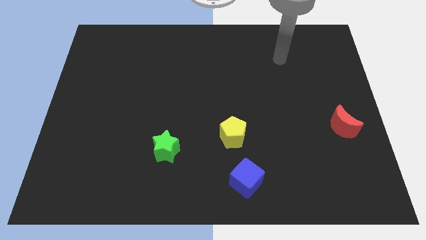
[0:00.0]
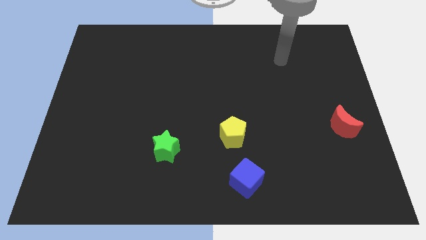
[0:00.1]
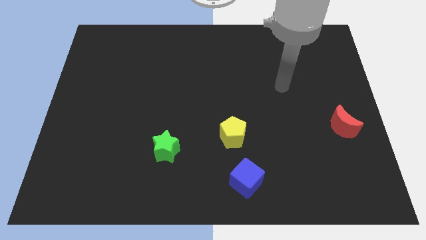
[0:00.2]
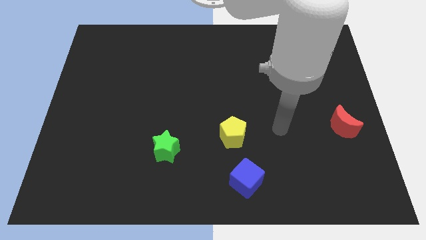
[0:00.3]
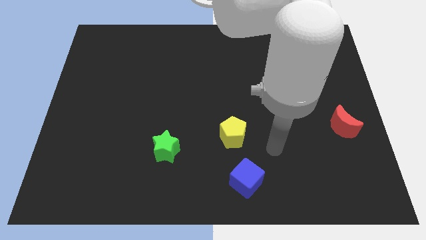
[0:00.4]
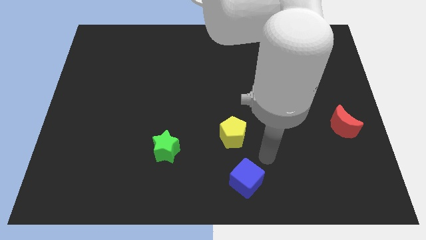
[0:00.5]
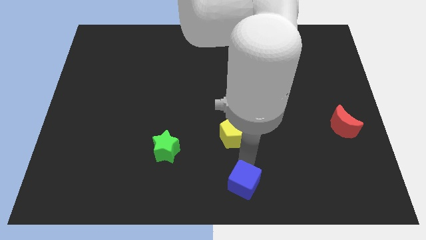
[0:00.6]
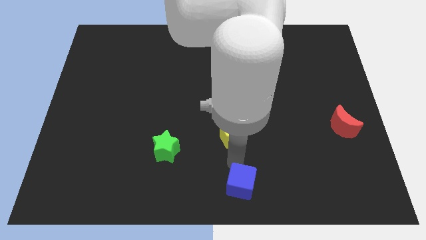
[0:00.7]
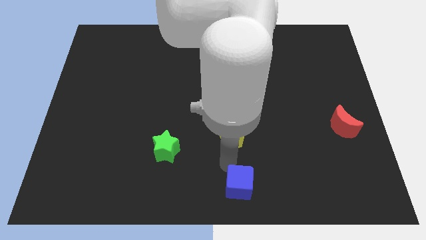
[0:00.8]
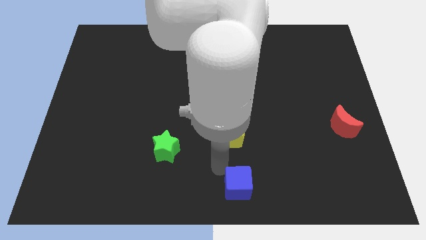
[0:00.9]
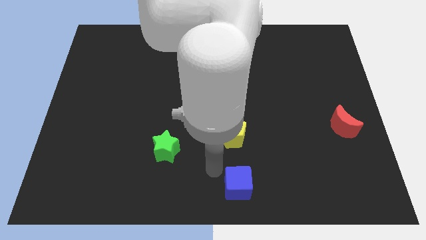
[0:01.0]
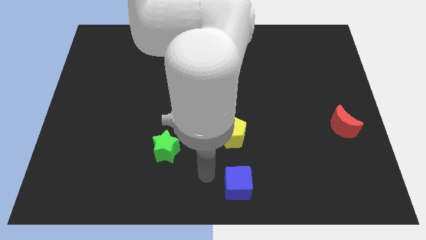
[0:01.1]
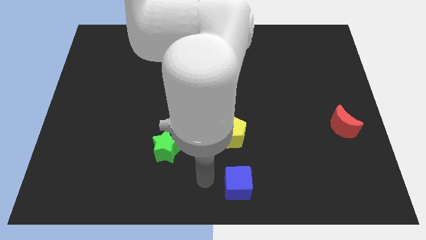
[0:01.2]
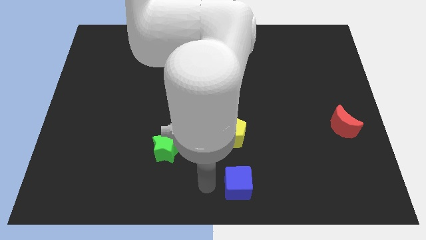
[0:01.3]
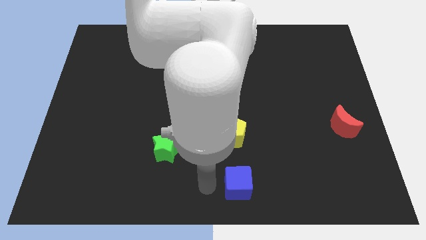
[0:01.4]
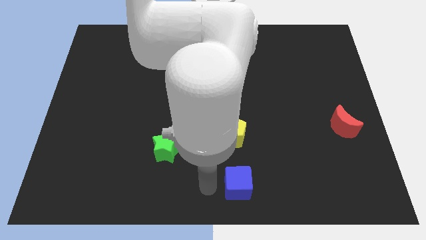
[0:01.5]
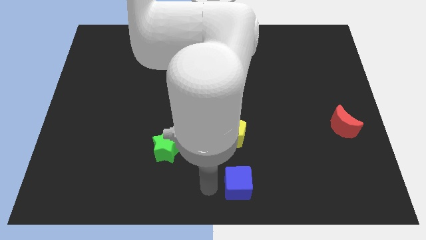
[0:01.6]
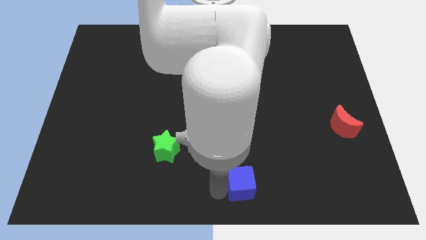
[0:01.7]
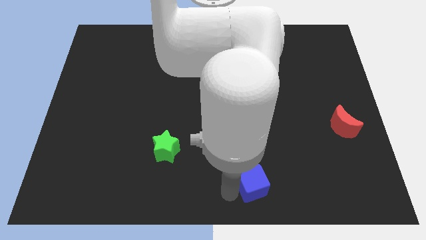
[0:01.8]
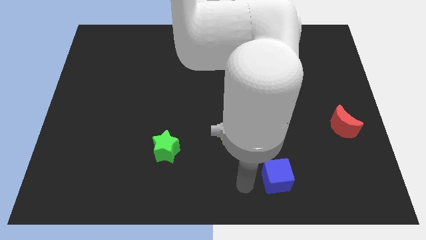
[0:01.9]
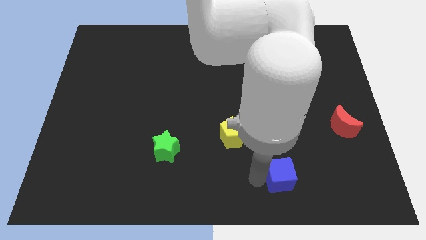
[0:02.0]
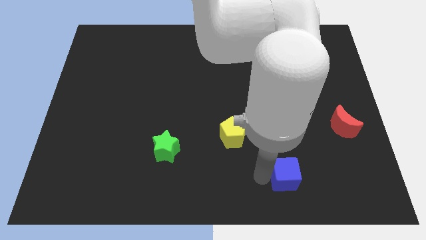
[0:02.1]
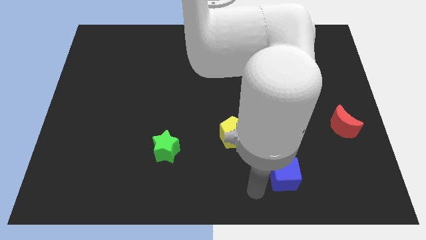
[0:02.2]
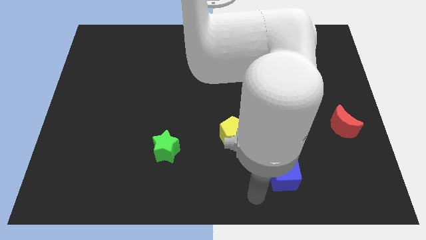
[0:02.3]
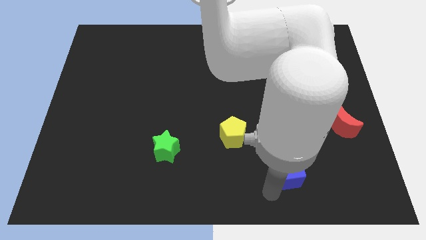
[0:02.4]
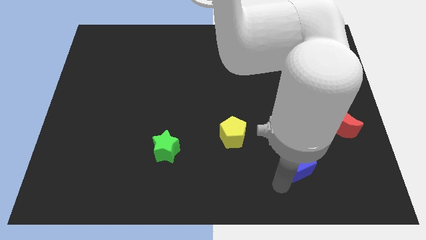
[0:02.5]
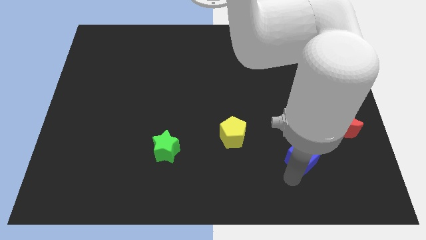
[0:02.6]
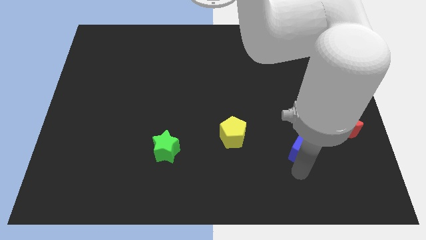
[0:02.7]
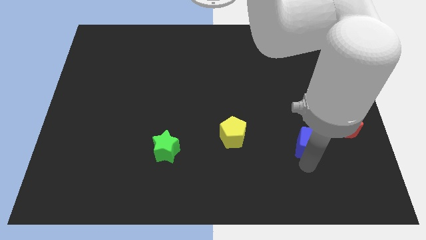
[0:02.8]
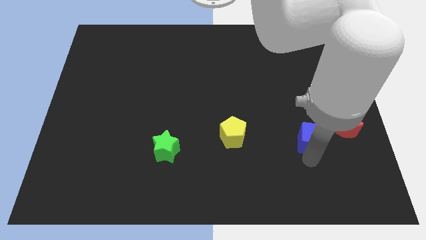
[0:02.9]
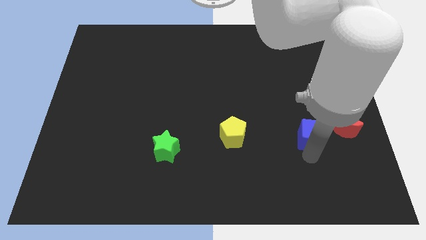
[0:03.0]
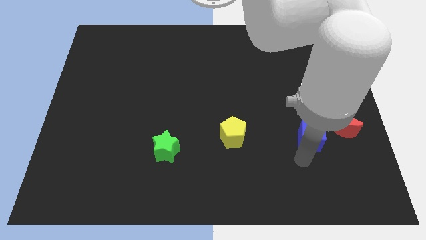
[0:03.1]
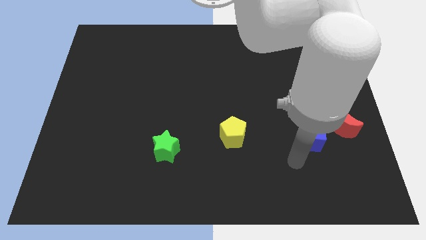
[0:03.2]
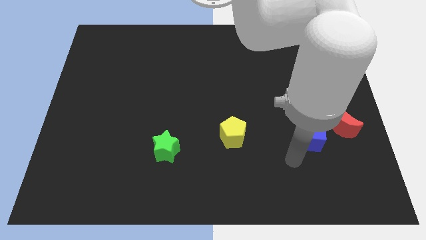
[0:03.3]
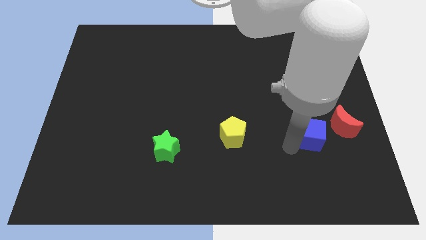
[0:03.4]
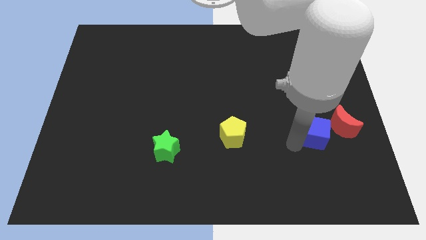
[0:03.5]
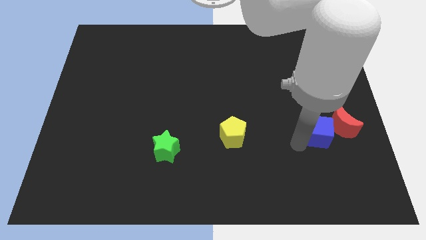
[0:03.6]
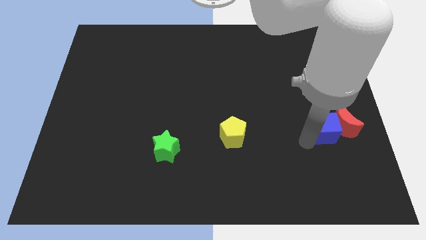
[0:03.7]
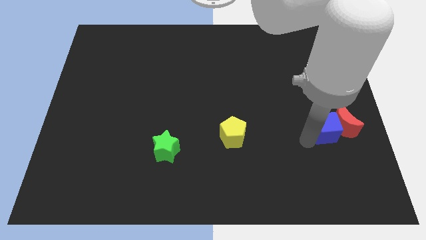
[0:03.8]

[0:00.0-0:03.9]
slide the blue block close to the red moon

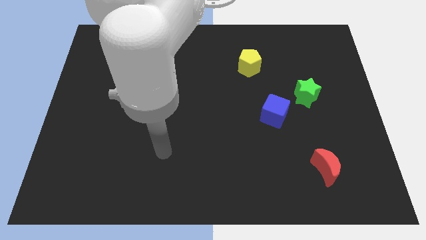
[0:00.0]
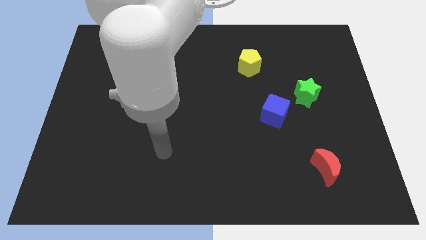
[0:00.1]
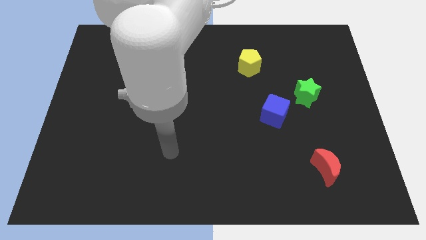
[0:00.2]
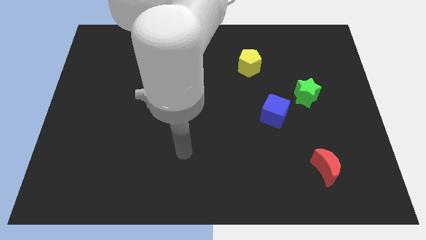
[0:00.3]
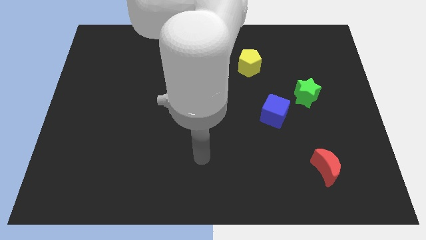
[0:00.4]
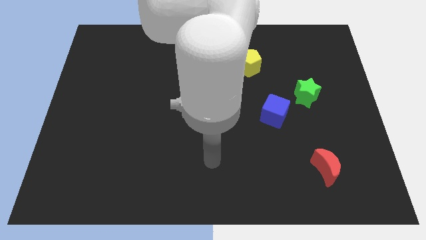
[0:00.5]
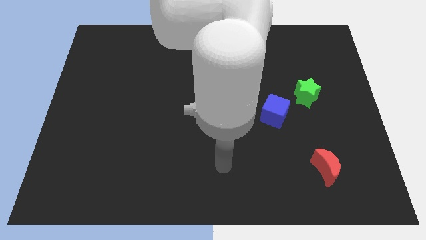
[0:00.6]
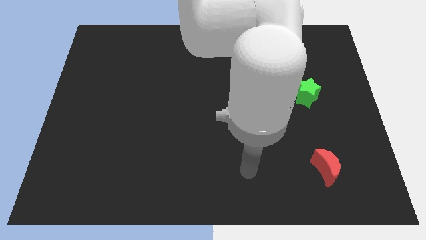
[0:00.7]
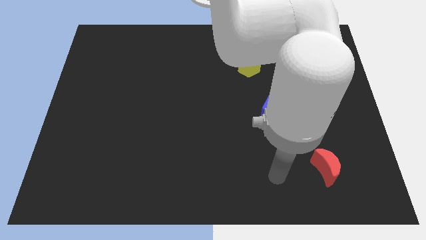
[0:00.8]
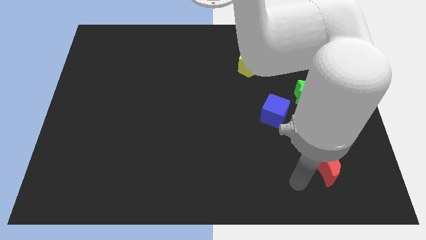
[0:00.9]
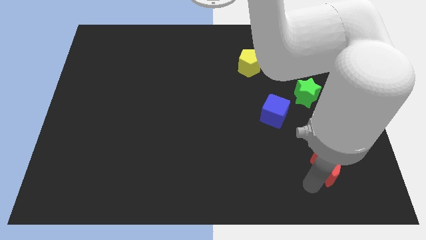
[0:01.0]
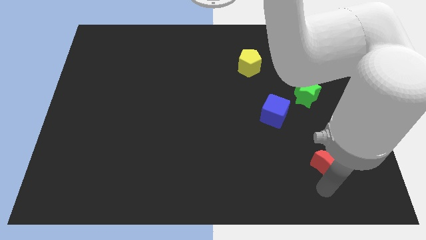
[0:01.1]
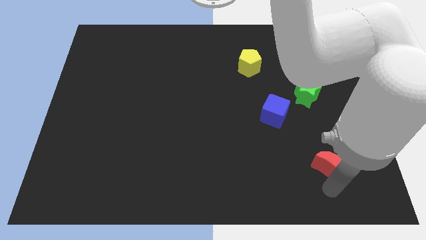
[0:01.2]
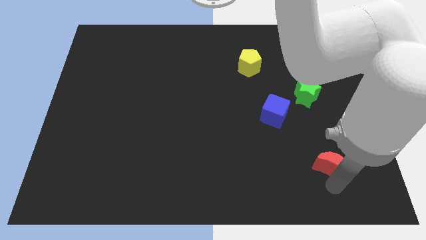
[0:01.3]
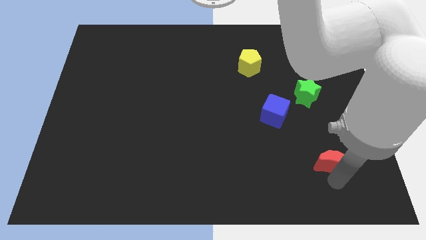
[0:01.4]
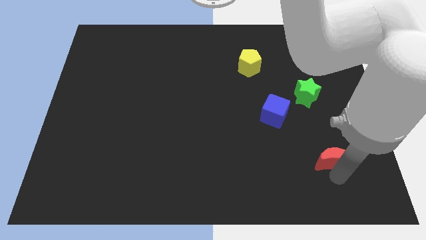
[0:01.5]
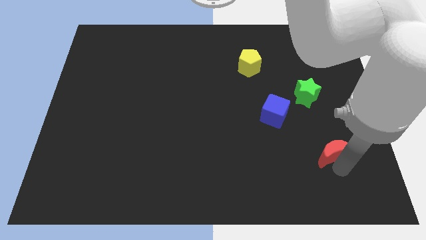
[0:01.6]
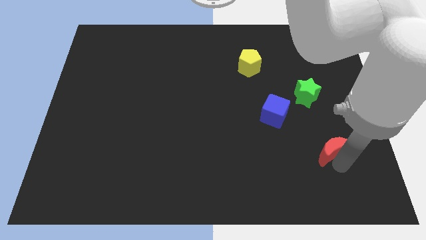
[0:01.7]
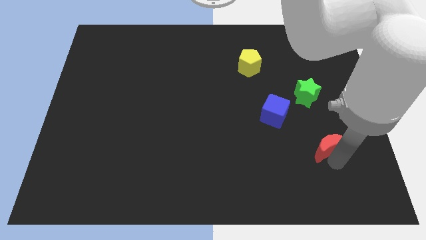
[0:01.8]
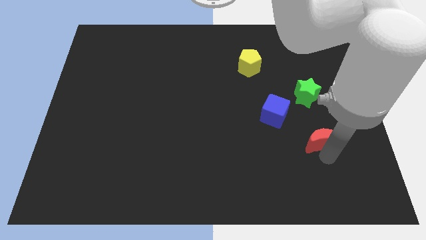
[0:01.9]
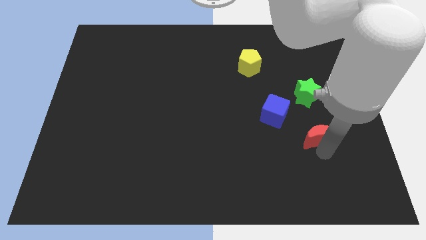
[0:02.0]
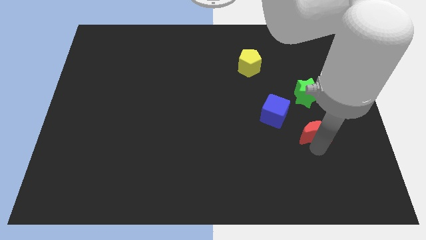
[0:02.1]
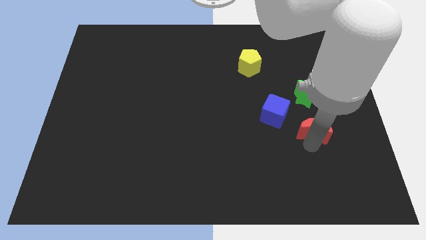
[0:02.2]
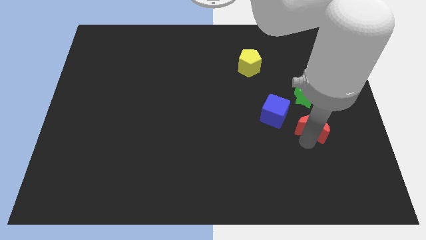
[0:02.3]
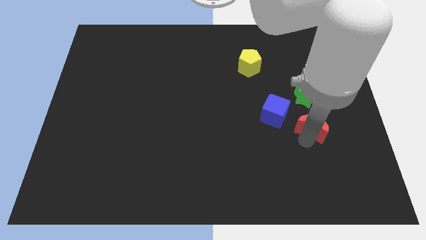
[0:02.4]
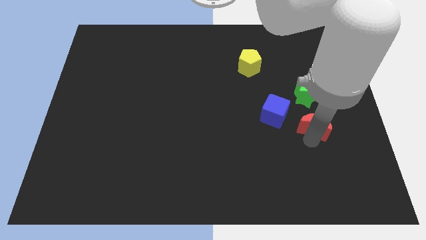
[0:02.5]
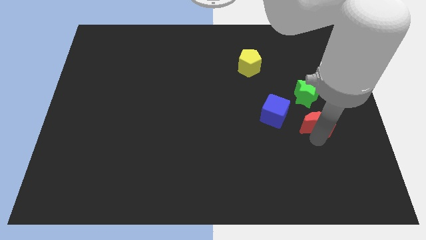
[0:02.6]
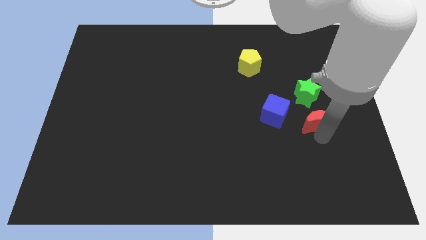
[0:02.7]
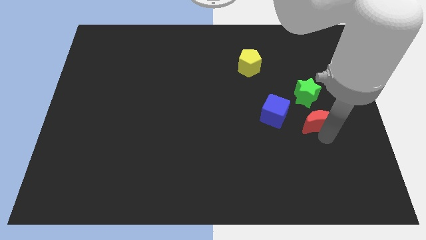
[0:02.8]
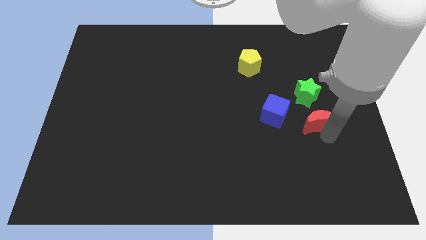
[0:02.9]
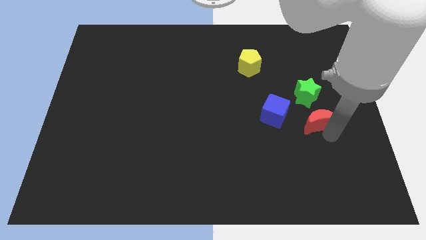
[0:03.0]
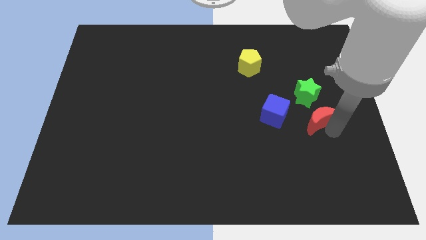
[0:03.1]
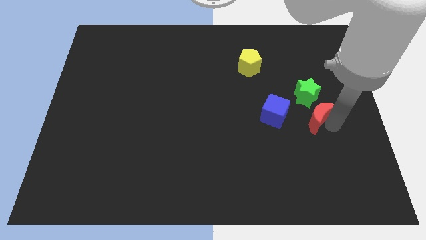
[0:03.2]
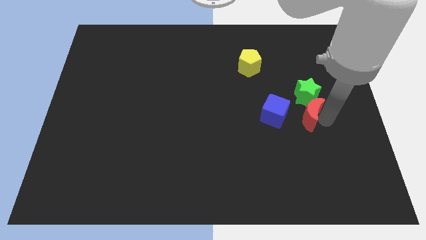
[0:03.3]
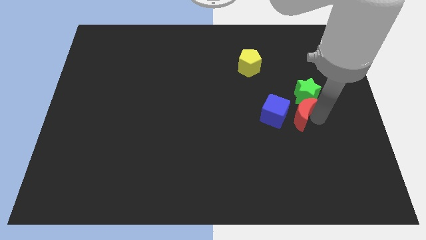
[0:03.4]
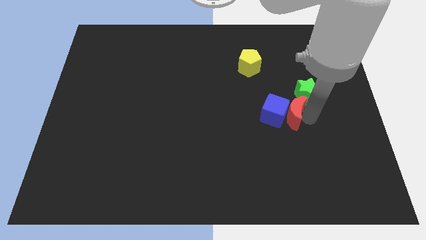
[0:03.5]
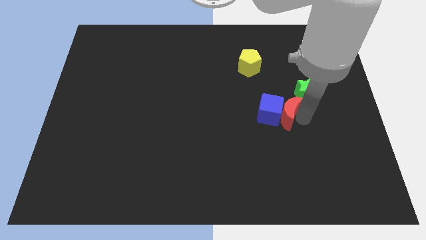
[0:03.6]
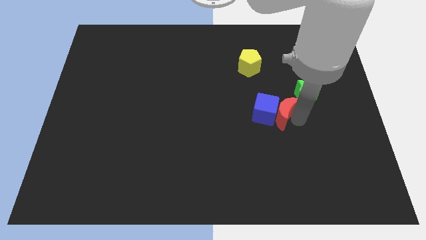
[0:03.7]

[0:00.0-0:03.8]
put the red block towards the blue block

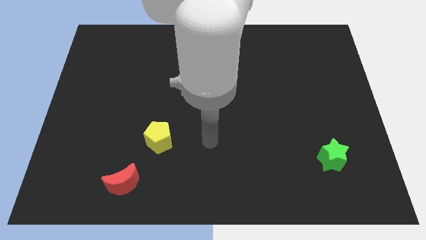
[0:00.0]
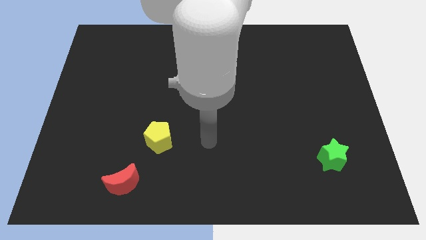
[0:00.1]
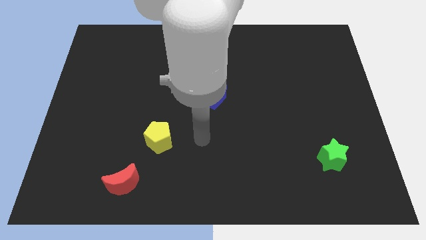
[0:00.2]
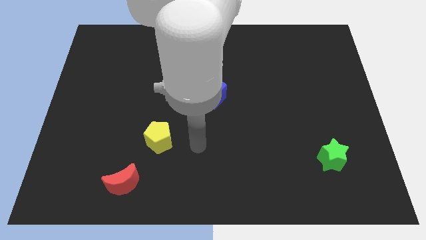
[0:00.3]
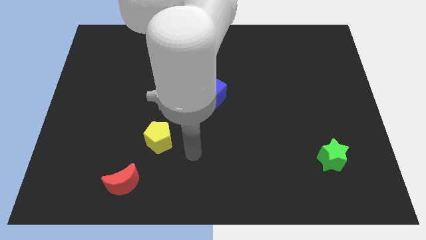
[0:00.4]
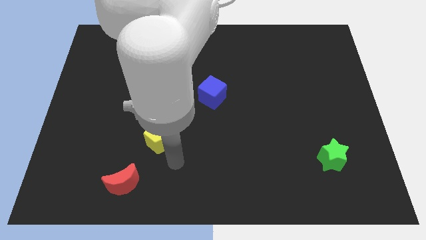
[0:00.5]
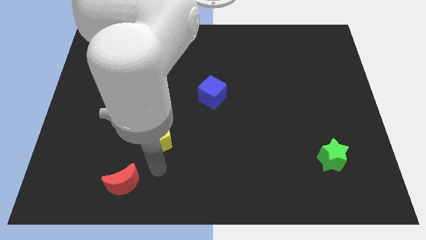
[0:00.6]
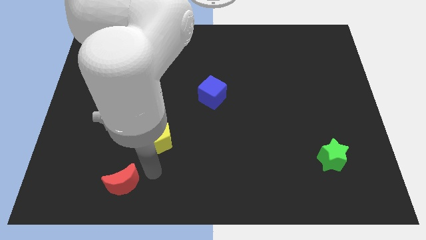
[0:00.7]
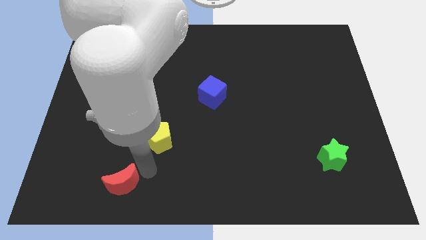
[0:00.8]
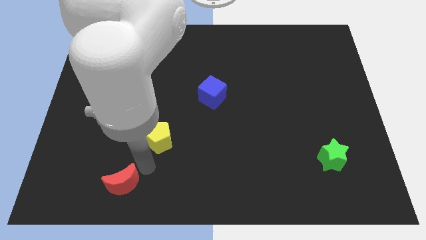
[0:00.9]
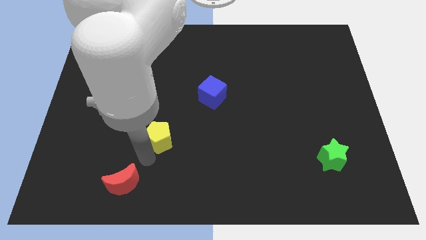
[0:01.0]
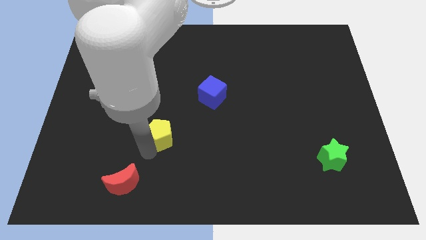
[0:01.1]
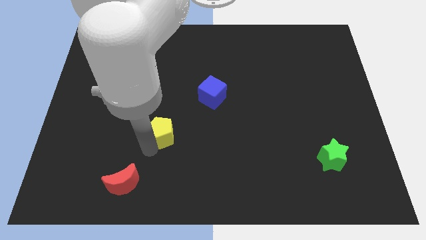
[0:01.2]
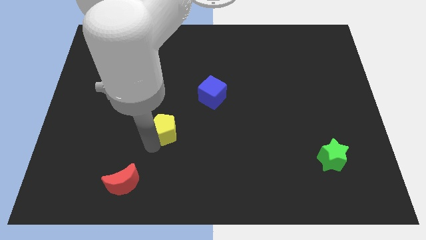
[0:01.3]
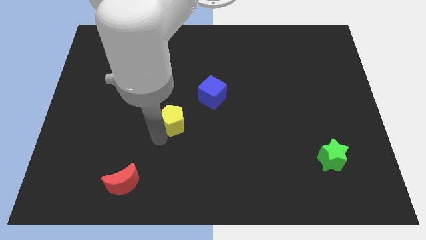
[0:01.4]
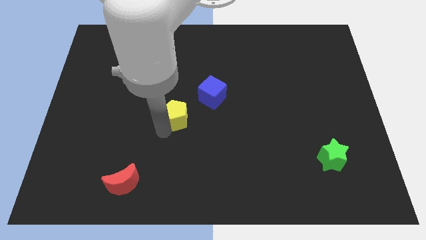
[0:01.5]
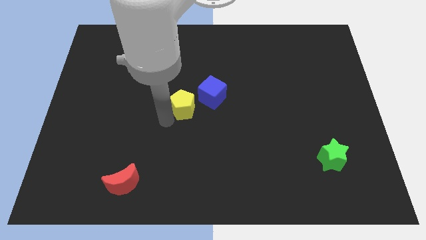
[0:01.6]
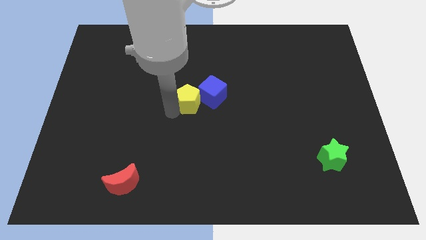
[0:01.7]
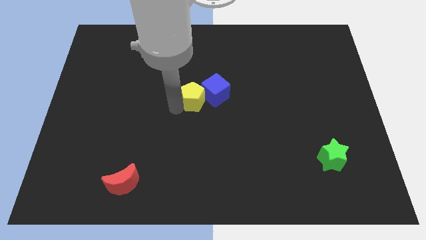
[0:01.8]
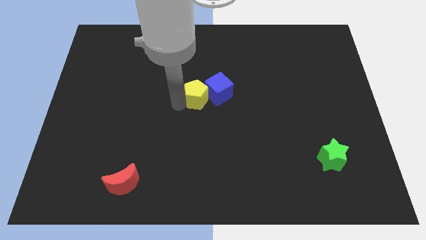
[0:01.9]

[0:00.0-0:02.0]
push the yellow pentagon close to the cube
